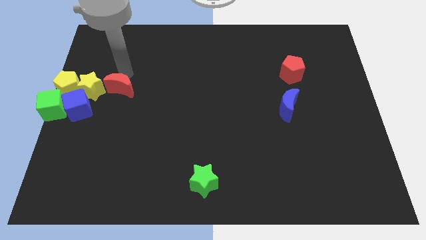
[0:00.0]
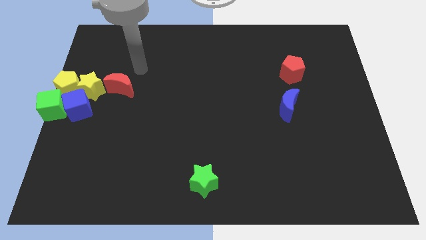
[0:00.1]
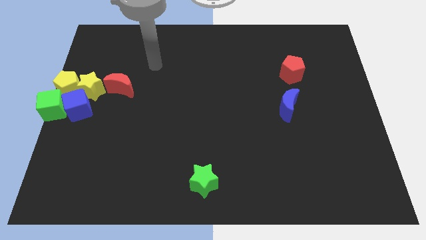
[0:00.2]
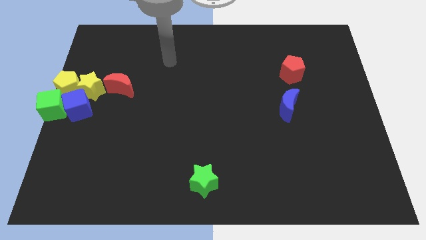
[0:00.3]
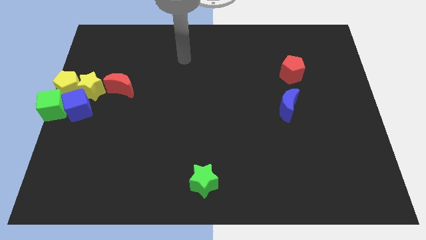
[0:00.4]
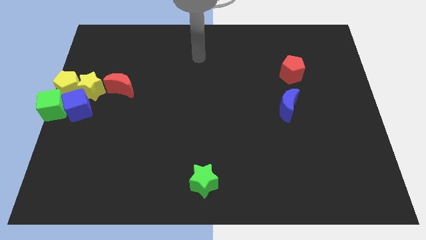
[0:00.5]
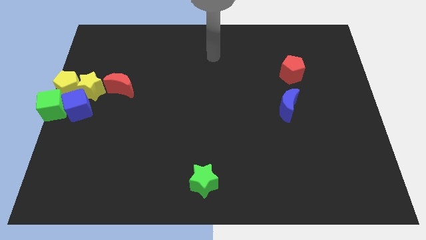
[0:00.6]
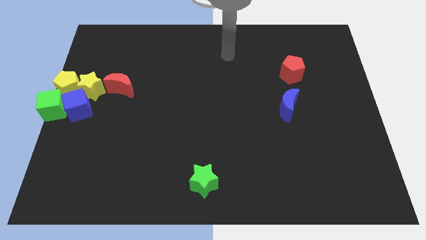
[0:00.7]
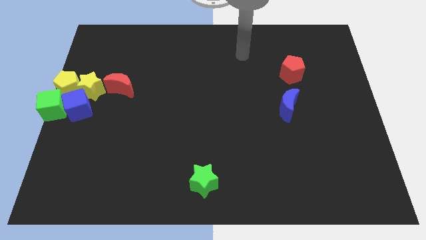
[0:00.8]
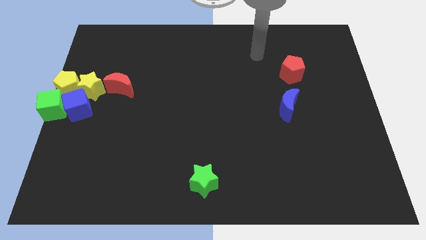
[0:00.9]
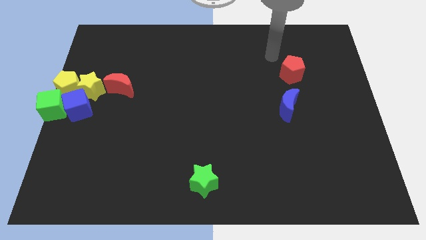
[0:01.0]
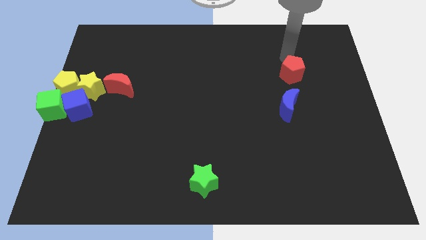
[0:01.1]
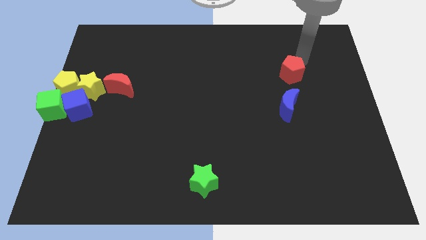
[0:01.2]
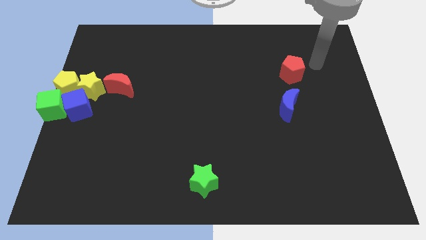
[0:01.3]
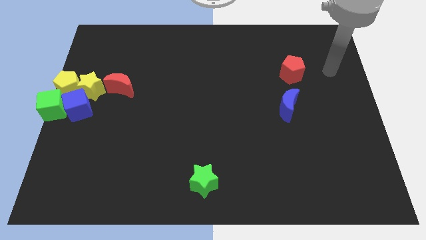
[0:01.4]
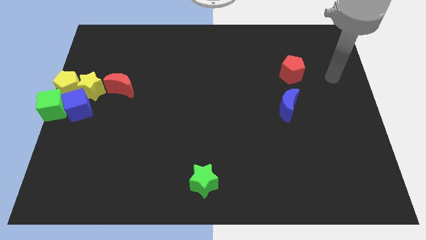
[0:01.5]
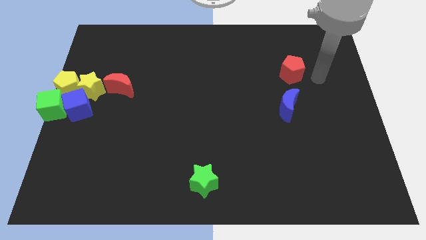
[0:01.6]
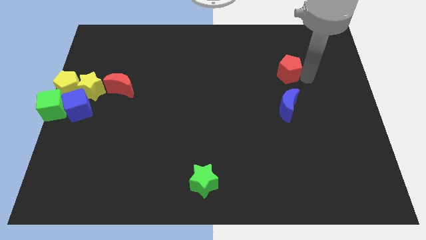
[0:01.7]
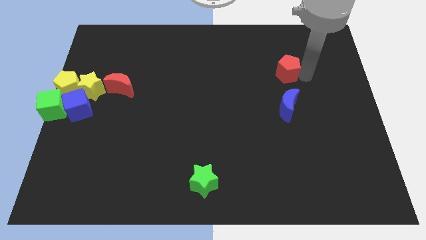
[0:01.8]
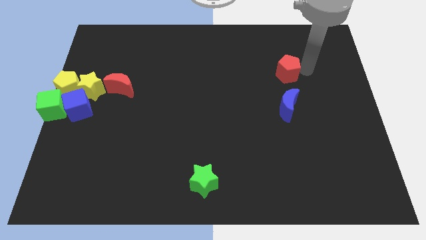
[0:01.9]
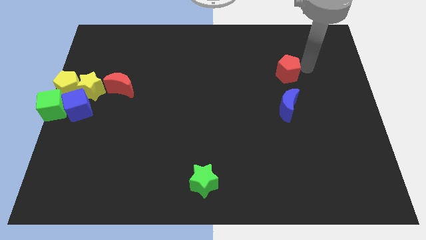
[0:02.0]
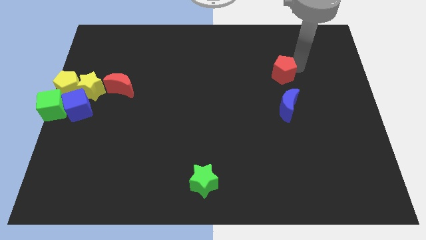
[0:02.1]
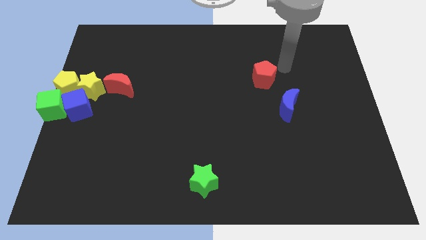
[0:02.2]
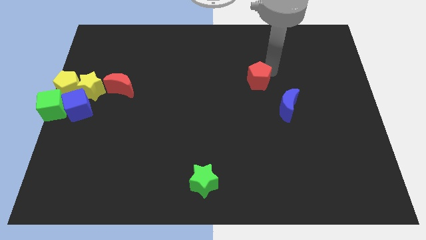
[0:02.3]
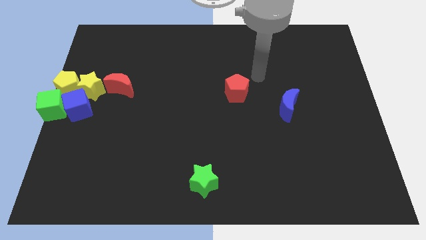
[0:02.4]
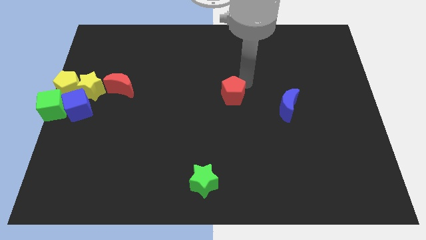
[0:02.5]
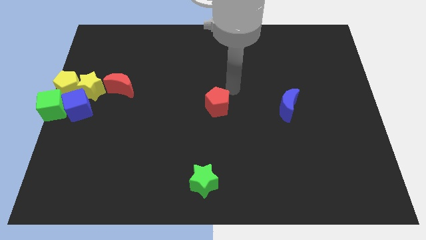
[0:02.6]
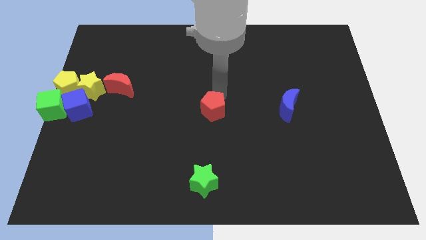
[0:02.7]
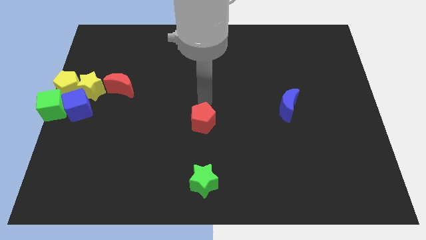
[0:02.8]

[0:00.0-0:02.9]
place the red pentagon above the green star

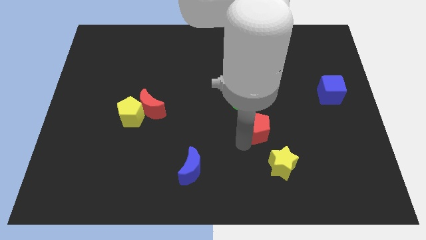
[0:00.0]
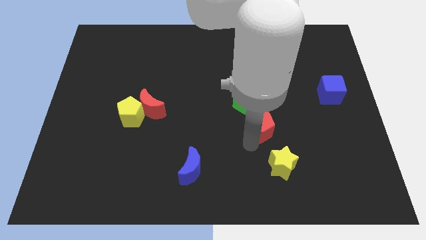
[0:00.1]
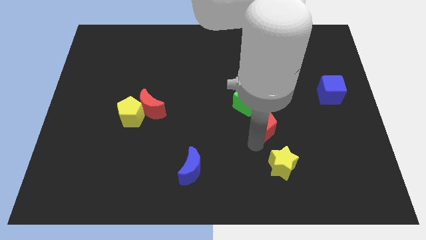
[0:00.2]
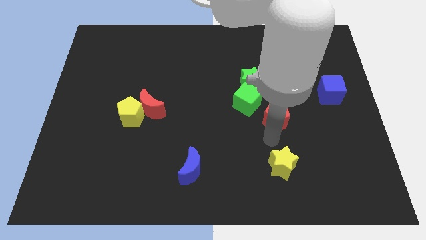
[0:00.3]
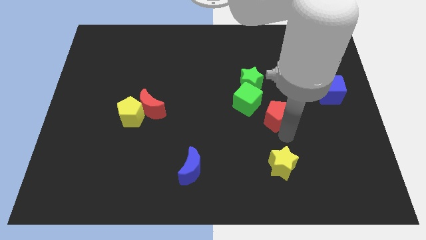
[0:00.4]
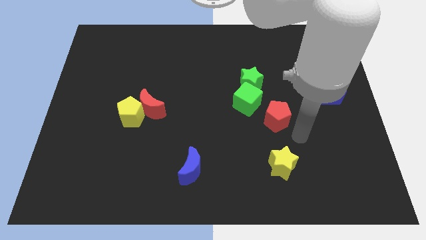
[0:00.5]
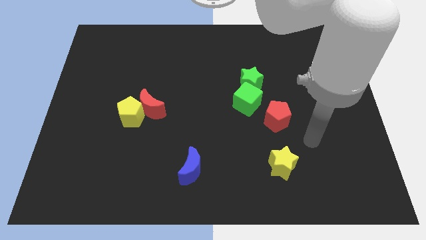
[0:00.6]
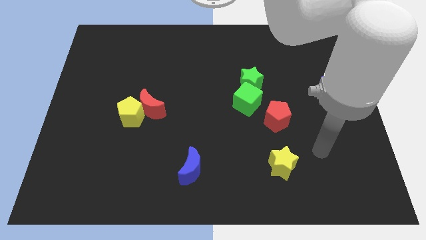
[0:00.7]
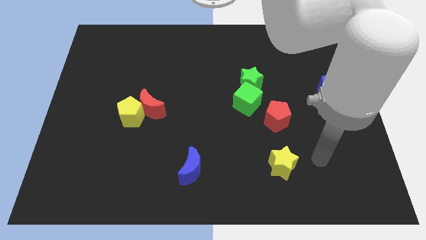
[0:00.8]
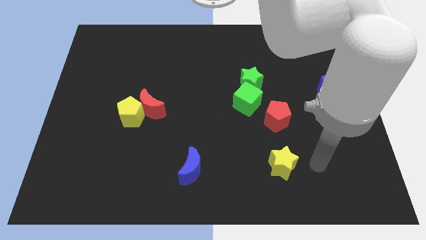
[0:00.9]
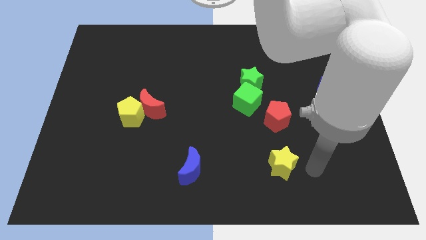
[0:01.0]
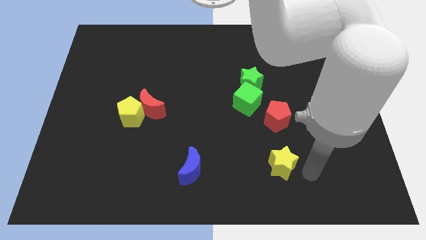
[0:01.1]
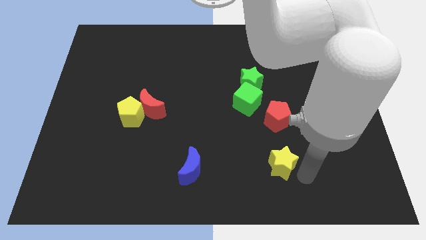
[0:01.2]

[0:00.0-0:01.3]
move the red pentagon above the yellow star

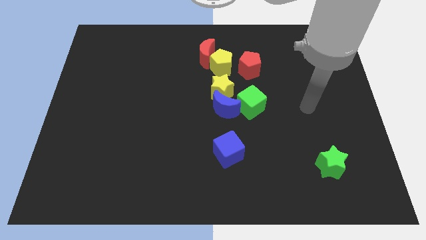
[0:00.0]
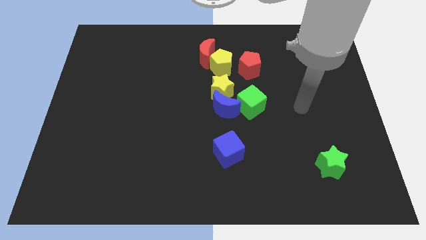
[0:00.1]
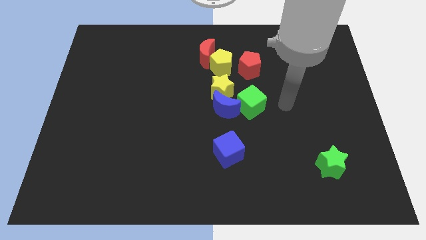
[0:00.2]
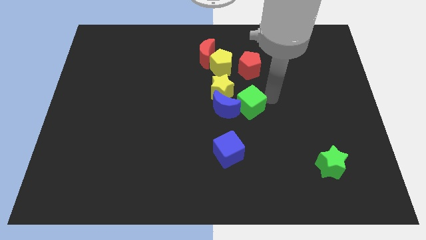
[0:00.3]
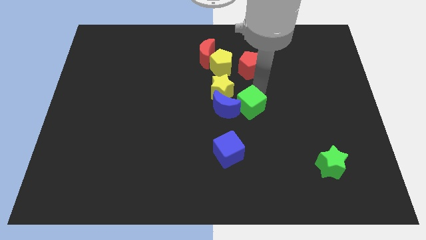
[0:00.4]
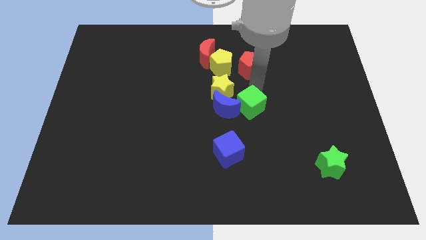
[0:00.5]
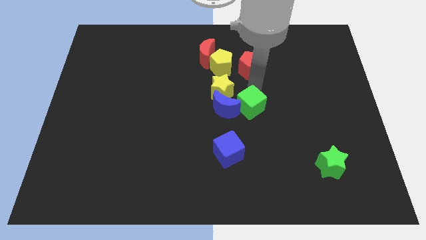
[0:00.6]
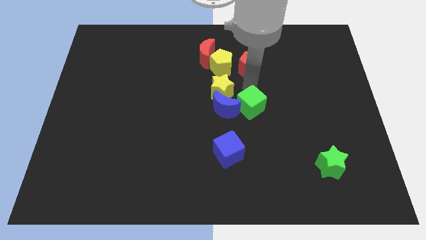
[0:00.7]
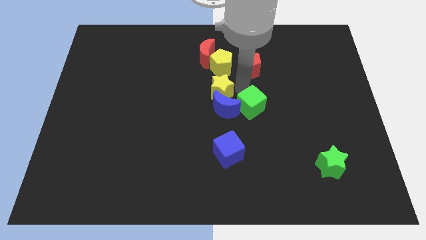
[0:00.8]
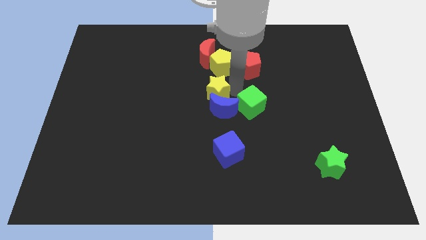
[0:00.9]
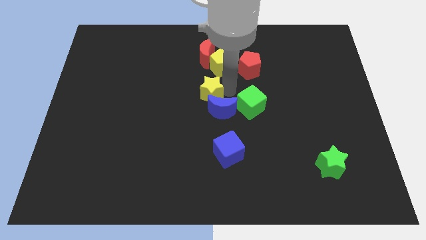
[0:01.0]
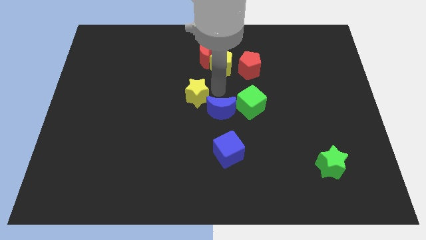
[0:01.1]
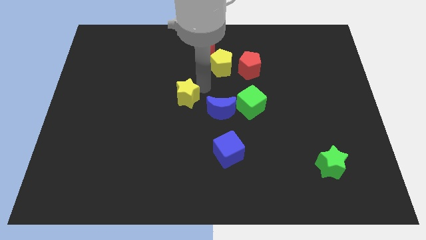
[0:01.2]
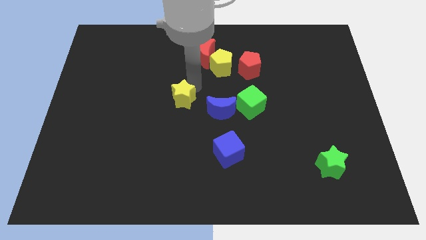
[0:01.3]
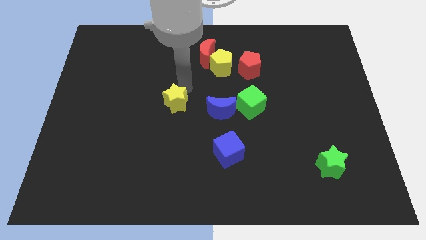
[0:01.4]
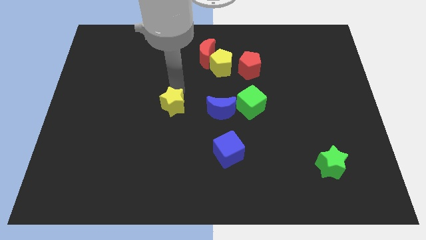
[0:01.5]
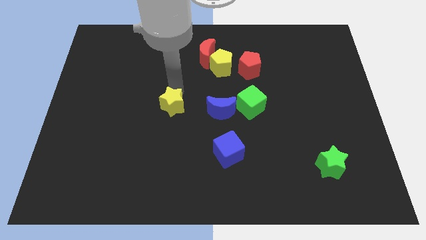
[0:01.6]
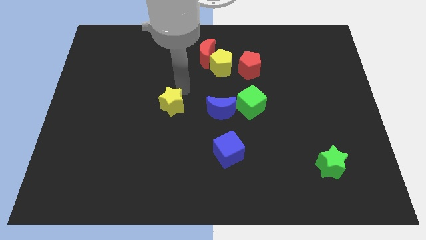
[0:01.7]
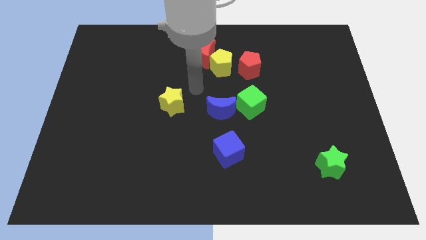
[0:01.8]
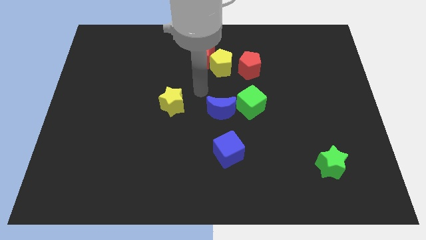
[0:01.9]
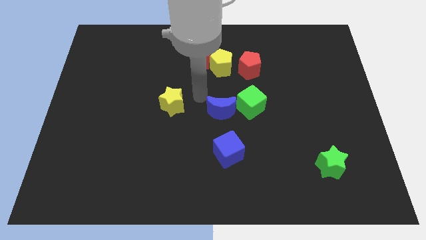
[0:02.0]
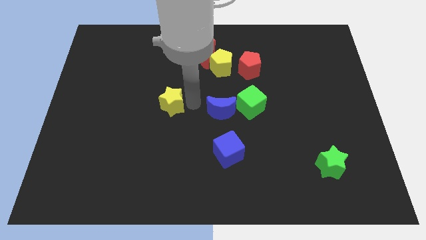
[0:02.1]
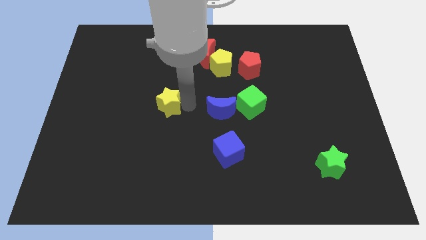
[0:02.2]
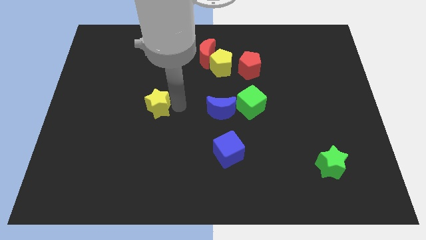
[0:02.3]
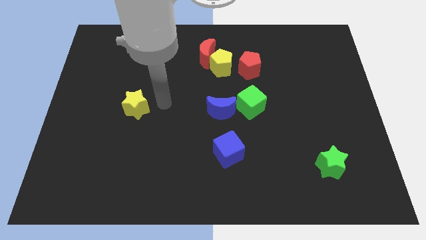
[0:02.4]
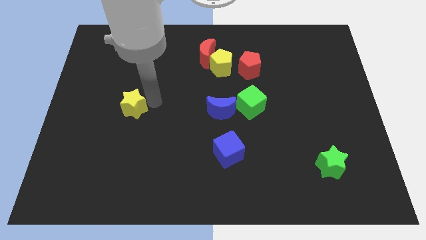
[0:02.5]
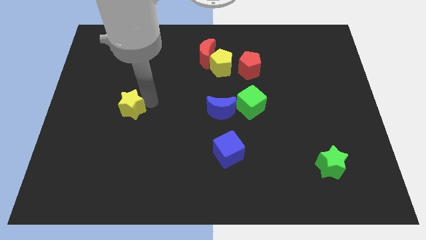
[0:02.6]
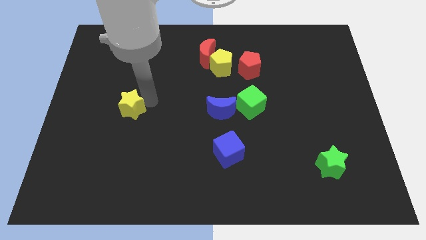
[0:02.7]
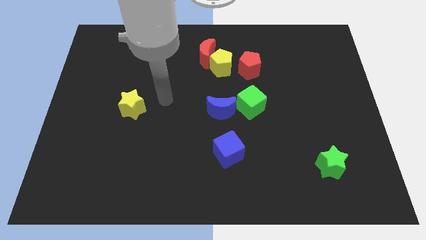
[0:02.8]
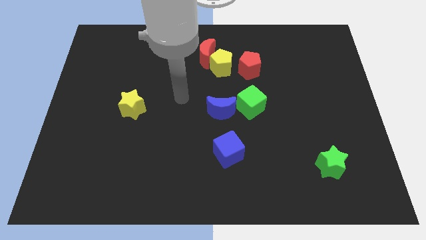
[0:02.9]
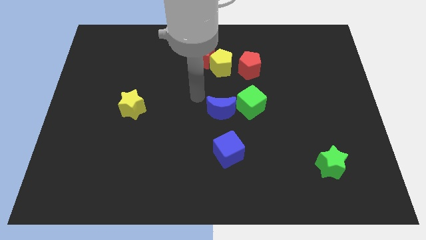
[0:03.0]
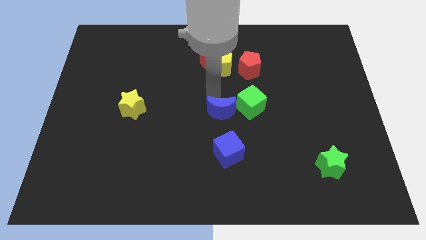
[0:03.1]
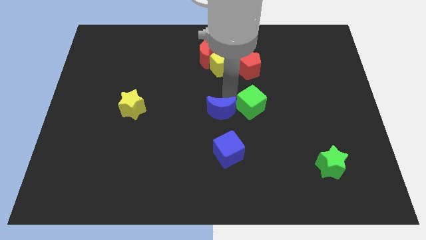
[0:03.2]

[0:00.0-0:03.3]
move the yellow star to the left side of the blue crescent

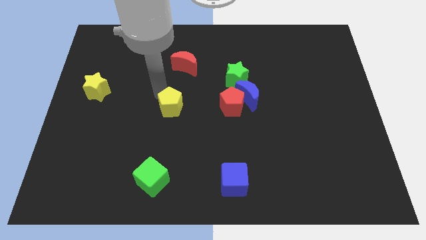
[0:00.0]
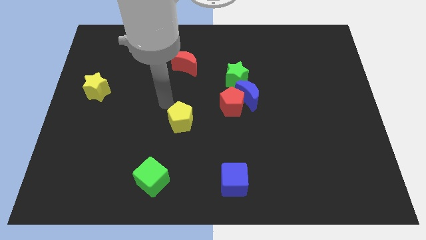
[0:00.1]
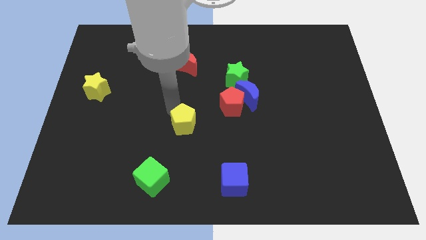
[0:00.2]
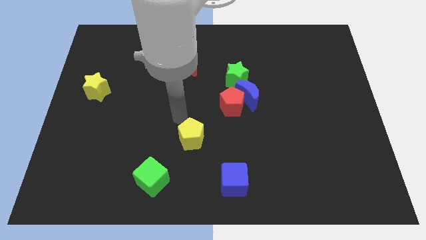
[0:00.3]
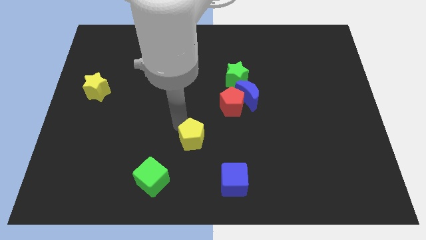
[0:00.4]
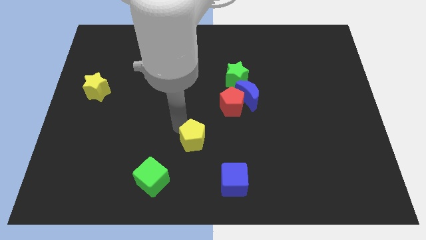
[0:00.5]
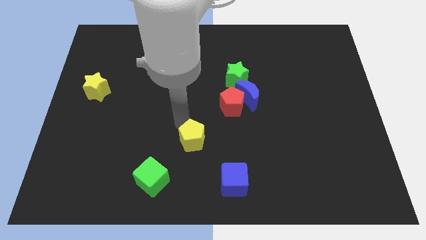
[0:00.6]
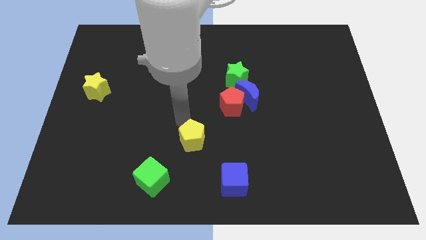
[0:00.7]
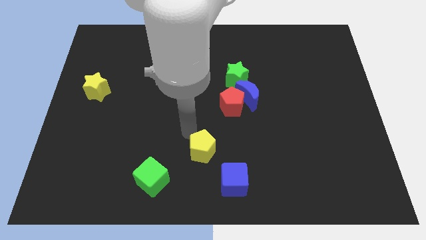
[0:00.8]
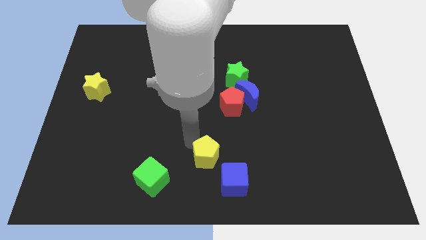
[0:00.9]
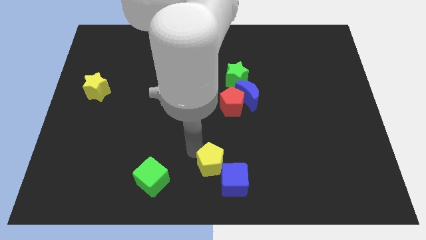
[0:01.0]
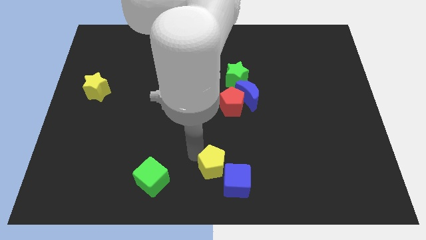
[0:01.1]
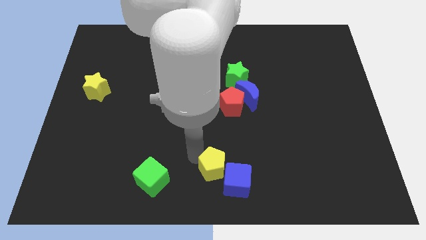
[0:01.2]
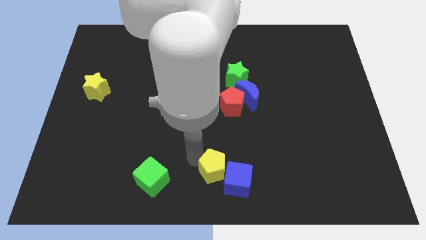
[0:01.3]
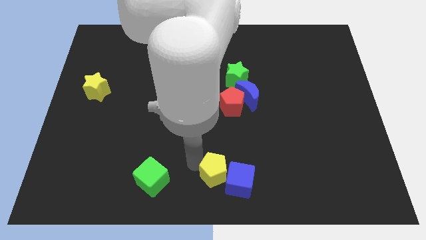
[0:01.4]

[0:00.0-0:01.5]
move the yellow pentagon towards the blue cube

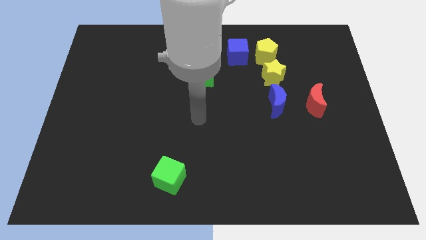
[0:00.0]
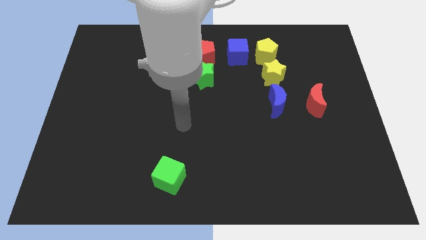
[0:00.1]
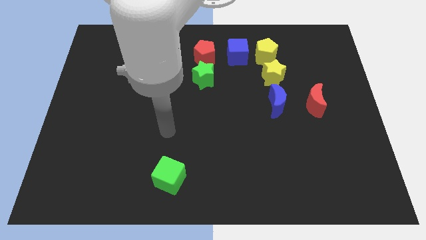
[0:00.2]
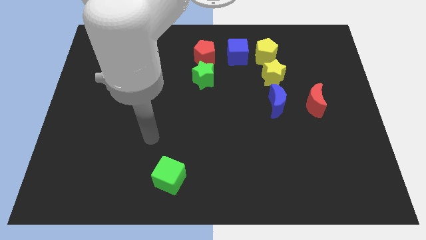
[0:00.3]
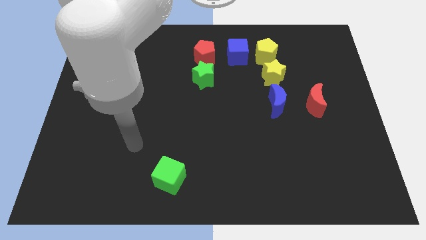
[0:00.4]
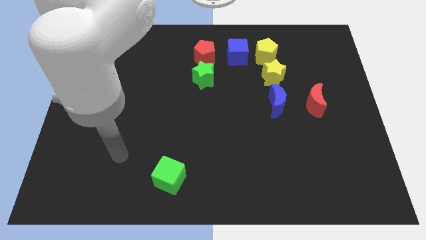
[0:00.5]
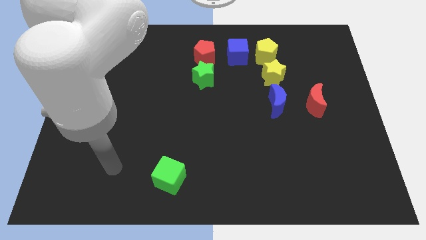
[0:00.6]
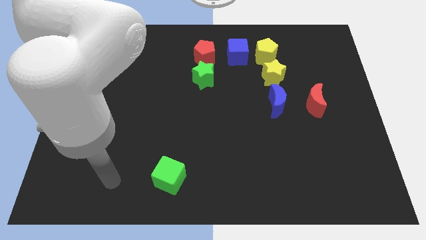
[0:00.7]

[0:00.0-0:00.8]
move the arm left to the green cube
